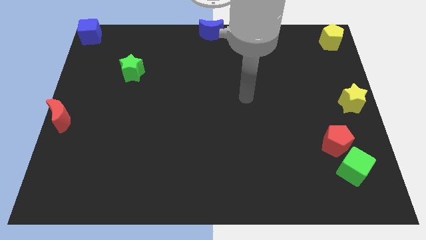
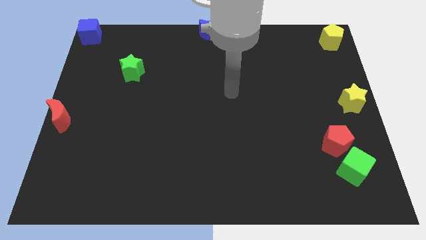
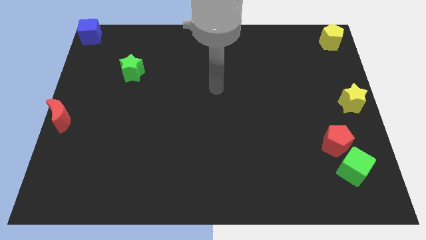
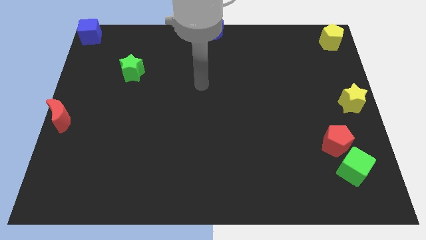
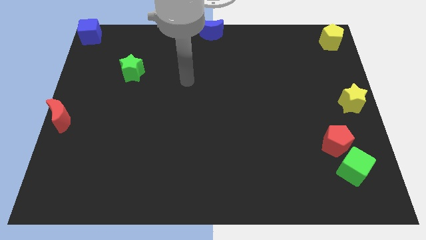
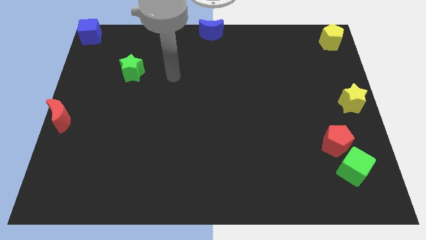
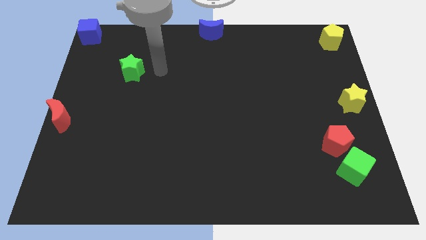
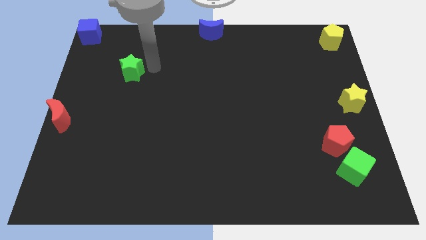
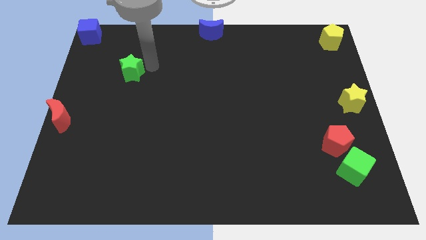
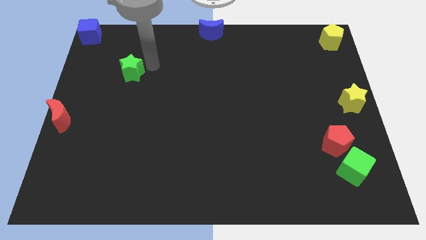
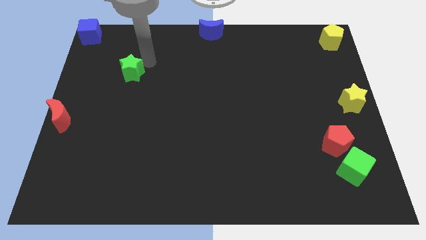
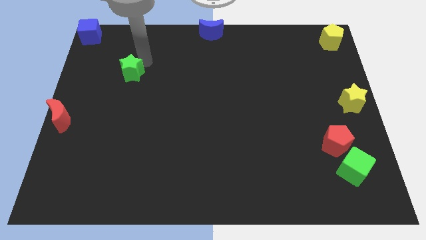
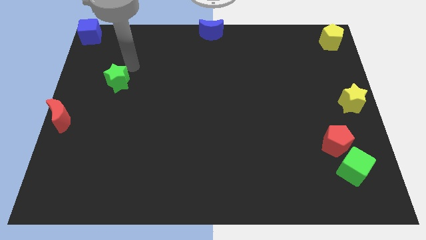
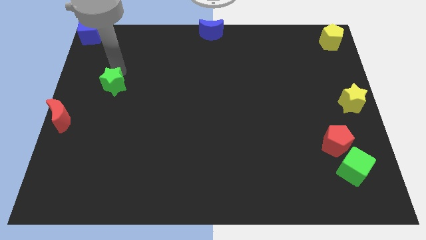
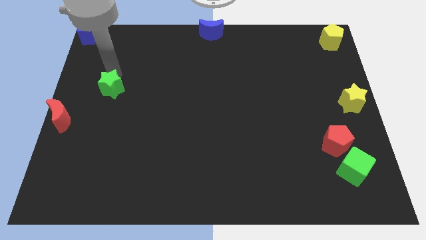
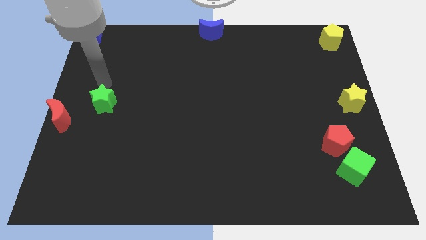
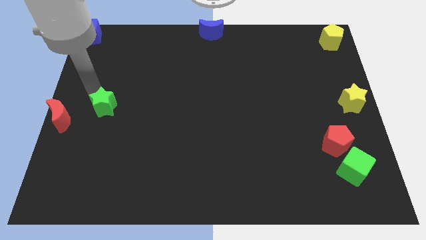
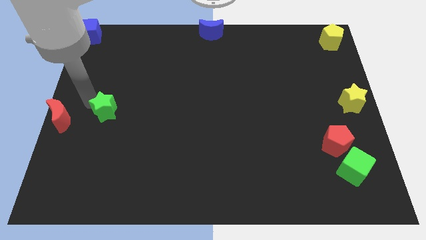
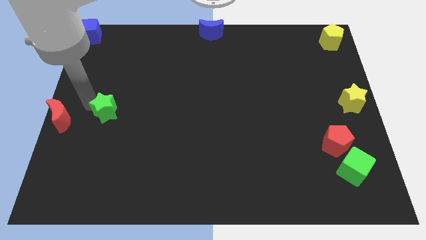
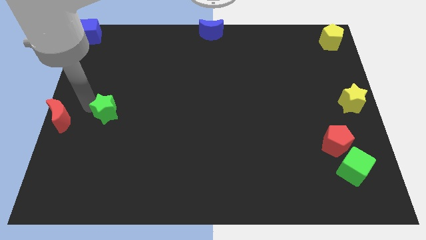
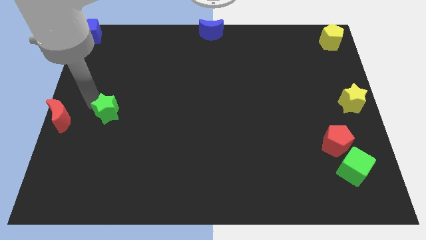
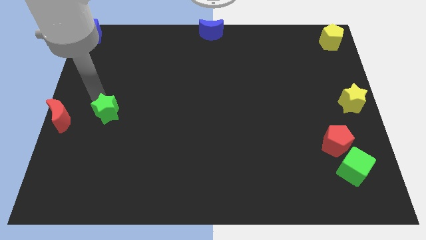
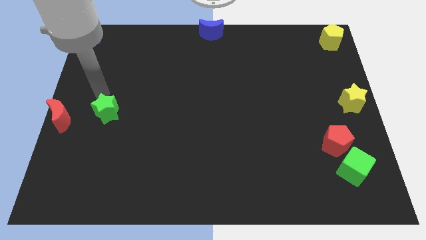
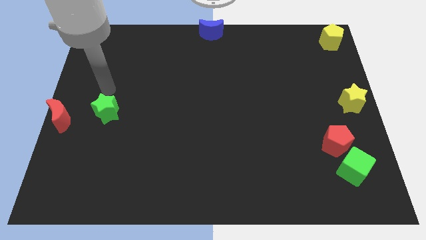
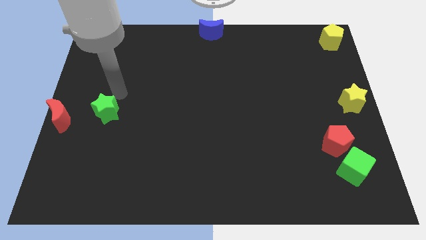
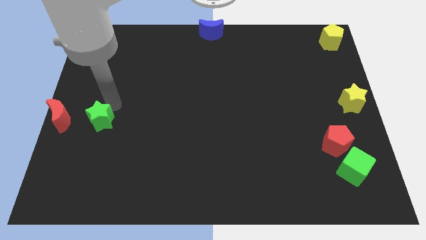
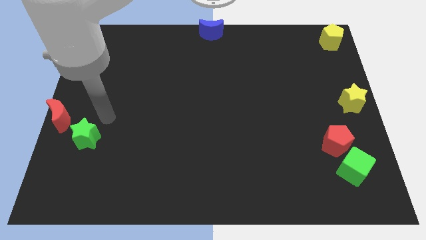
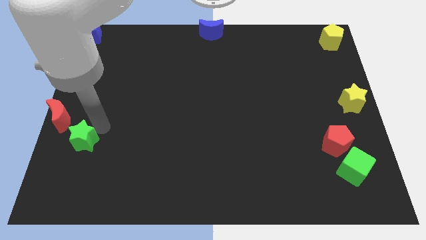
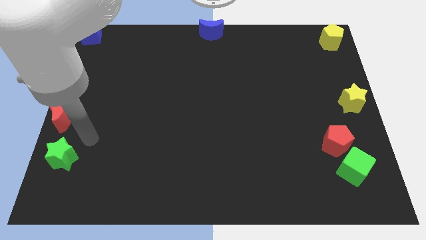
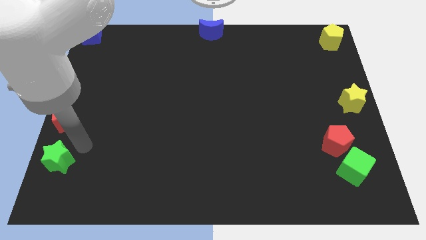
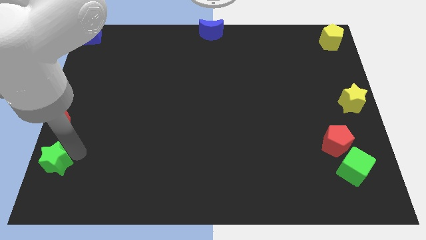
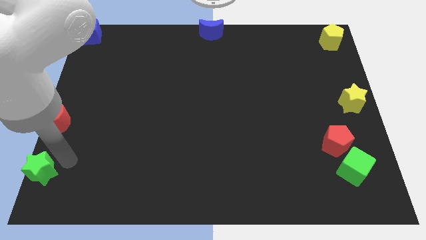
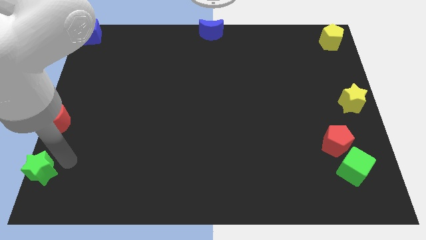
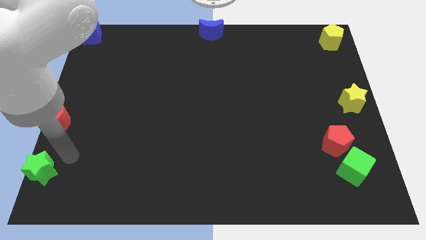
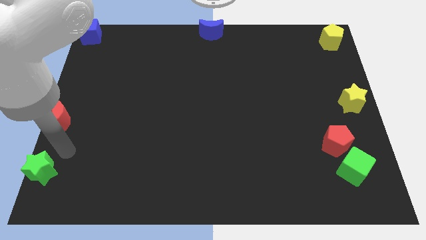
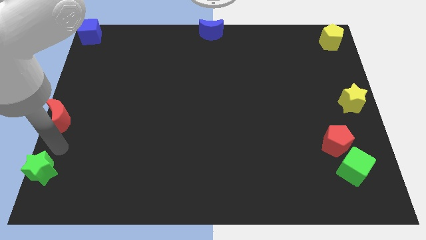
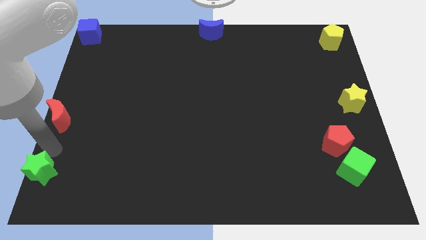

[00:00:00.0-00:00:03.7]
put the green star below the red moon

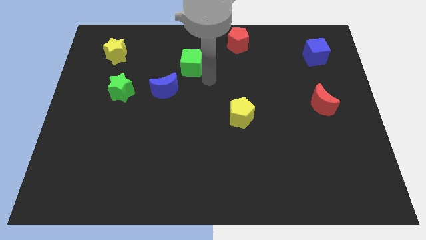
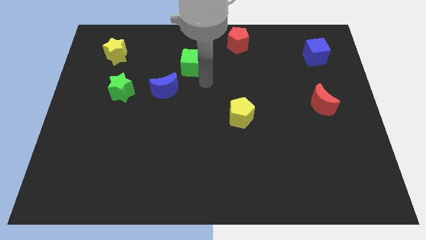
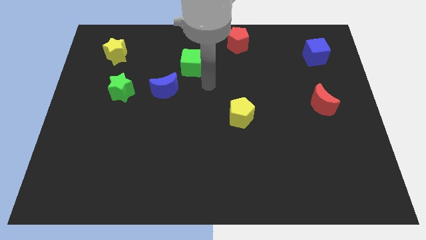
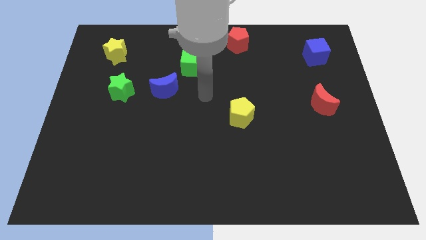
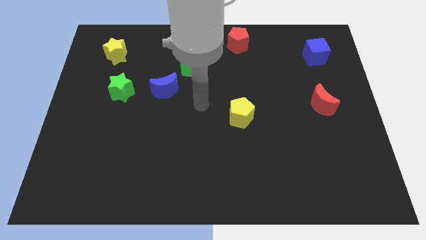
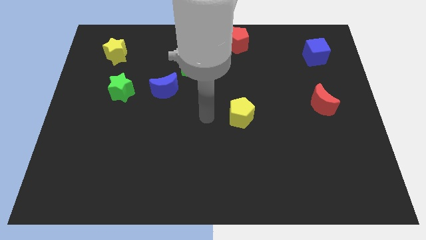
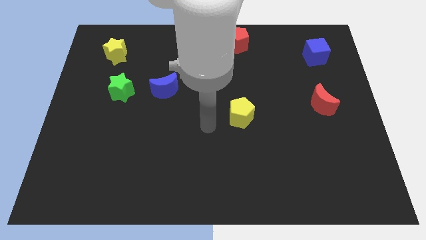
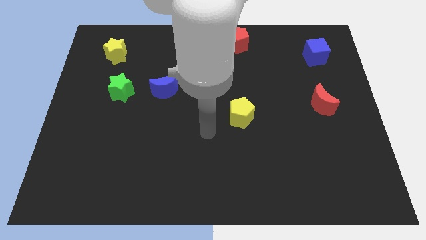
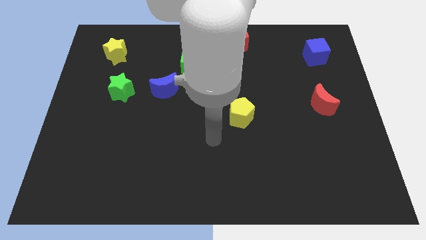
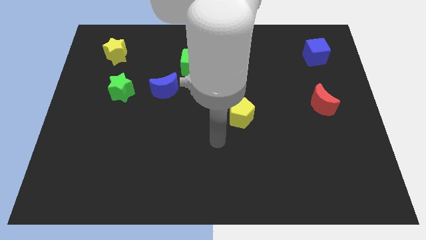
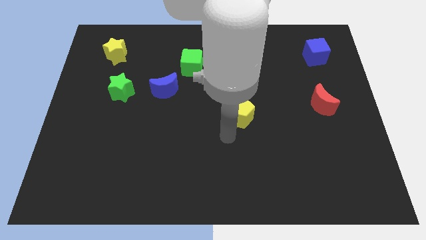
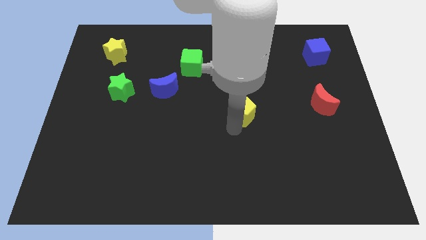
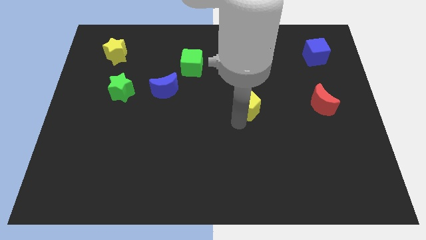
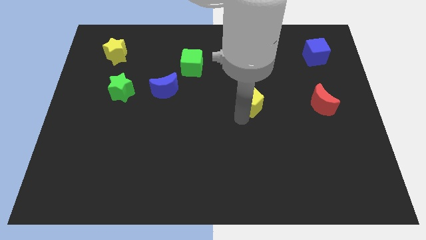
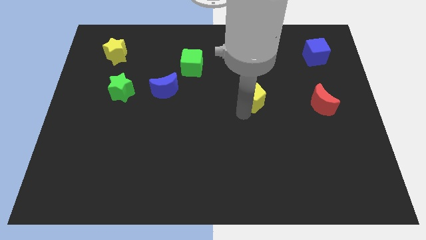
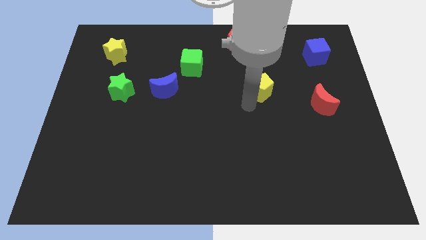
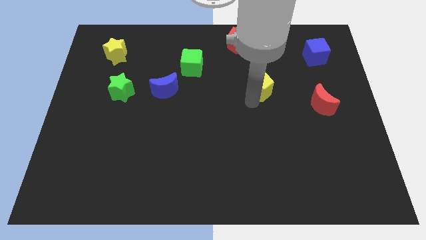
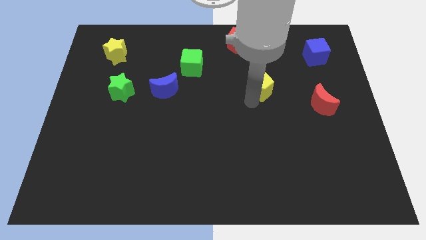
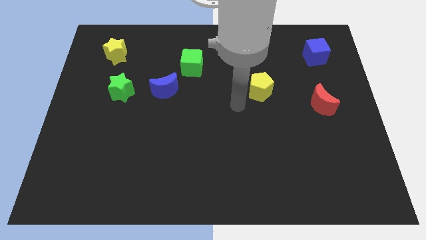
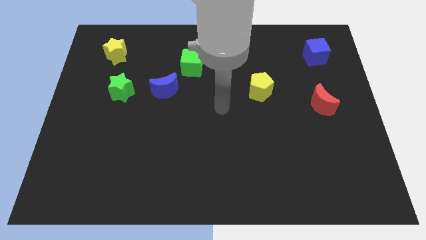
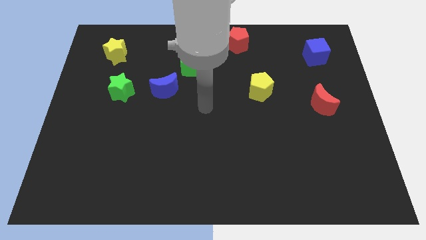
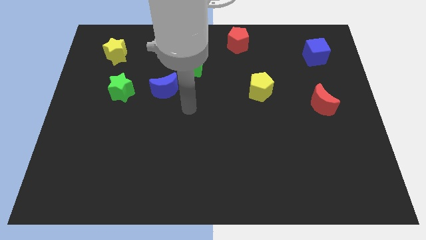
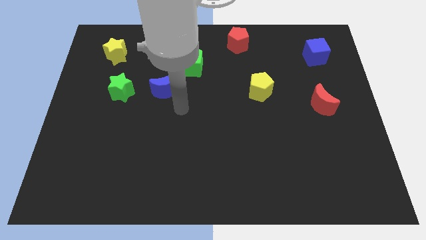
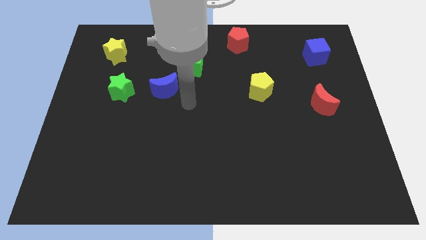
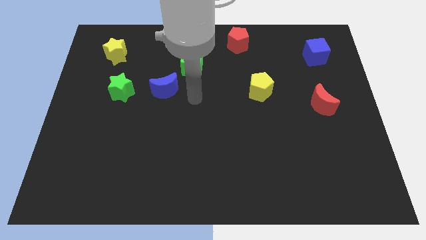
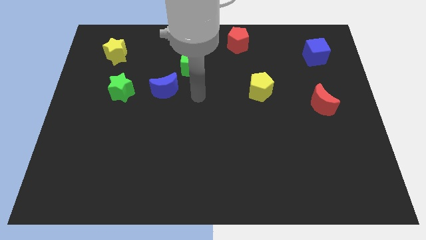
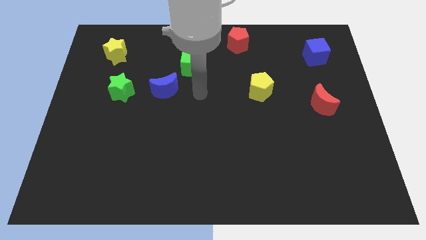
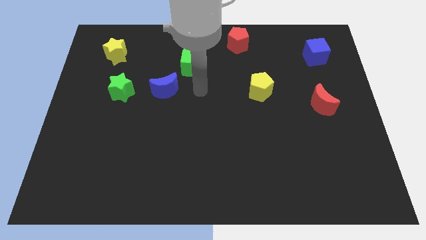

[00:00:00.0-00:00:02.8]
place your arm at the right of the blue crescent

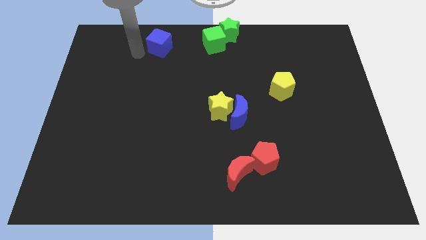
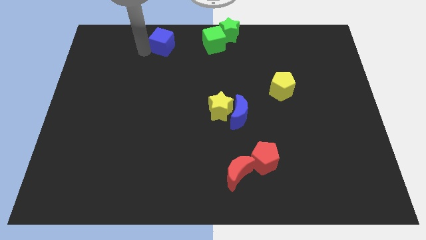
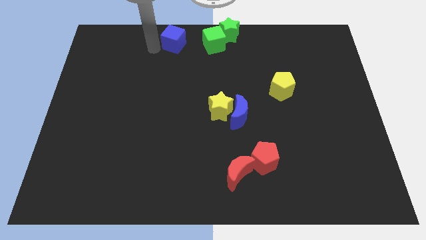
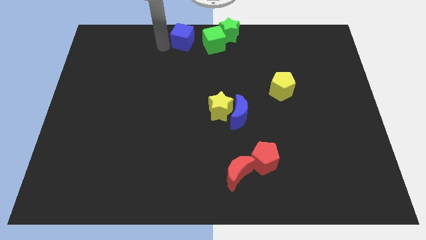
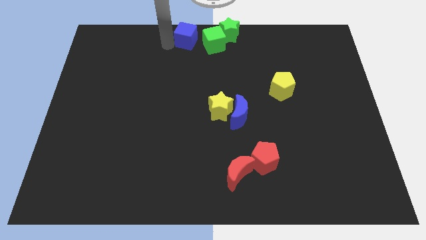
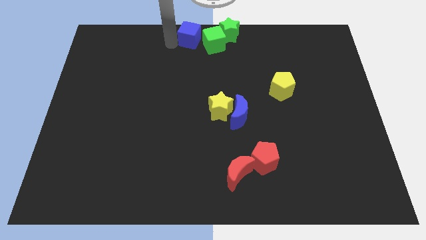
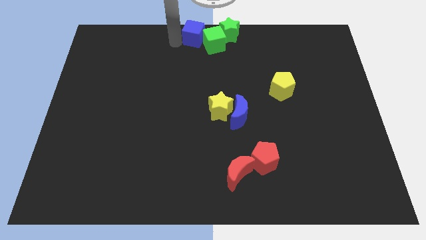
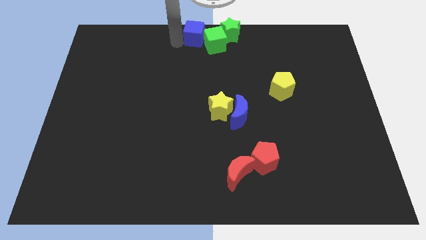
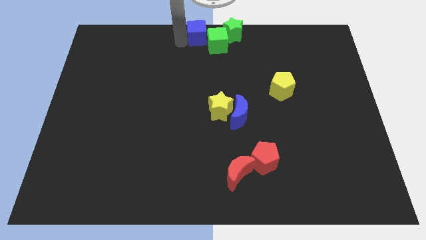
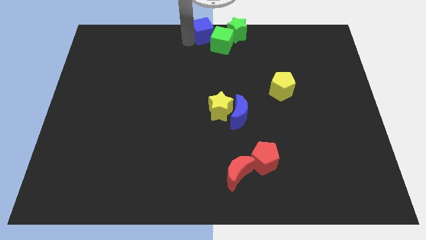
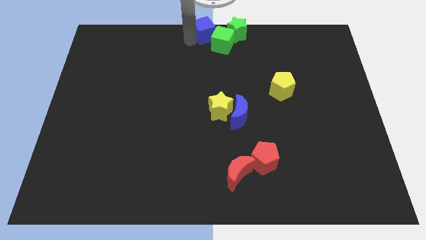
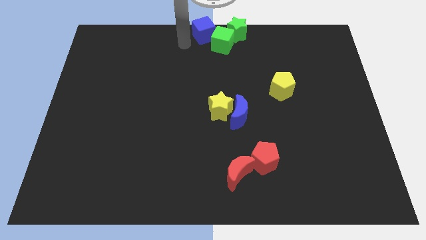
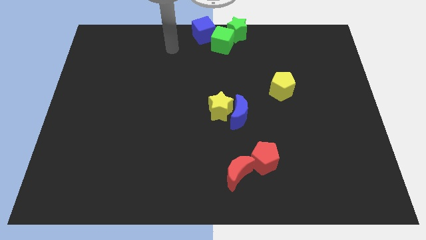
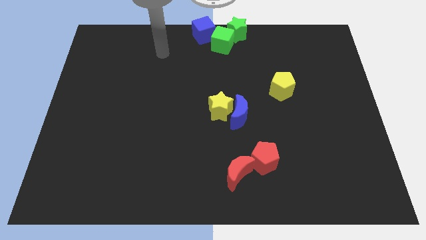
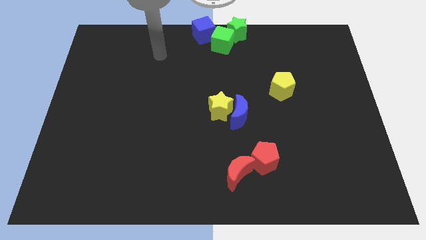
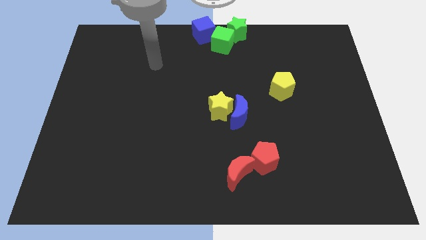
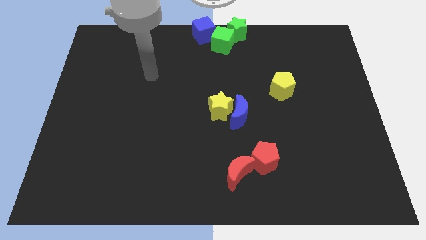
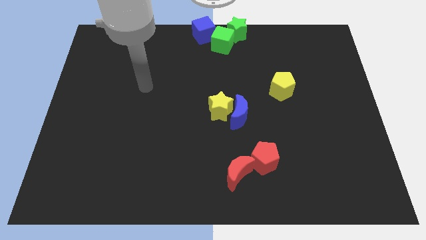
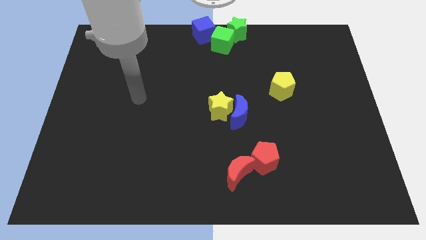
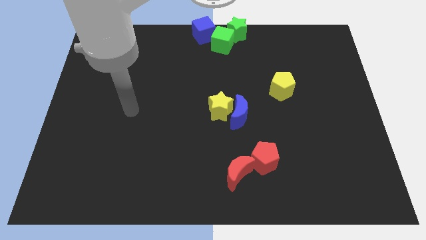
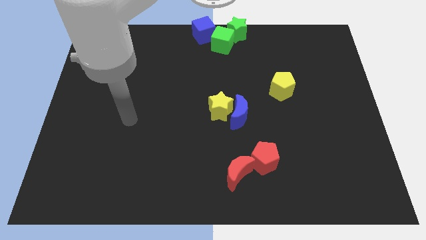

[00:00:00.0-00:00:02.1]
push the blue cube into the middle of the board

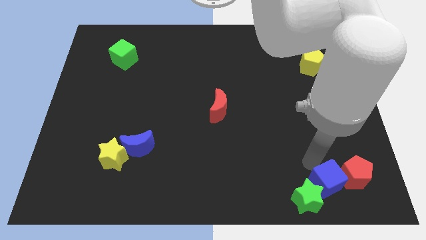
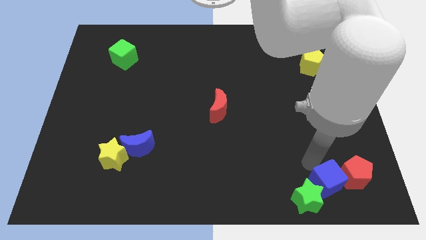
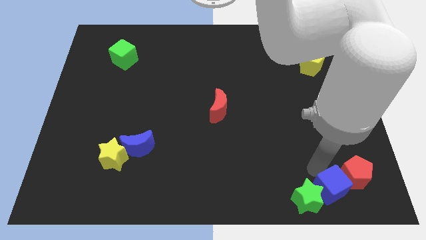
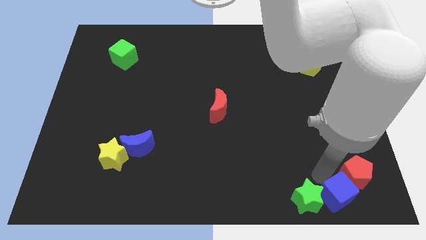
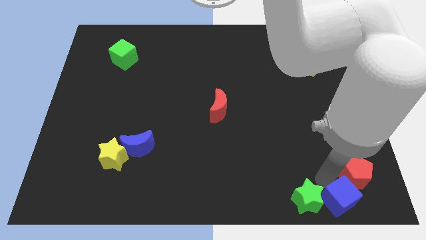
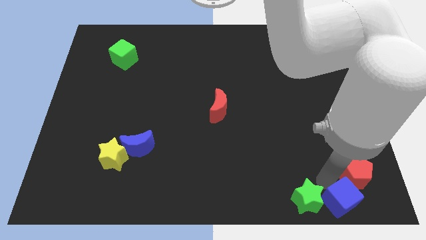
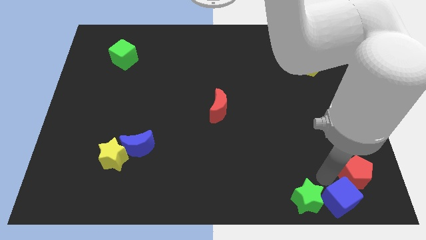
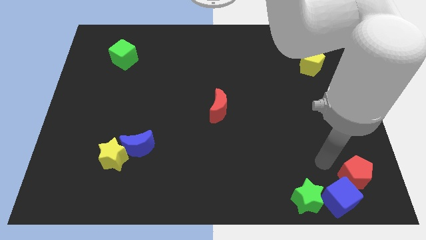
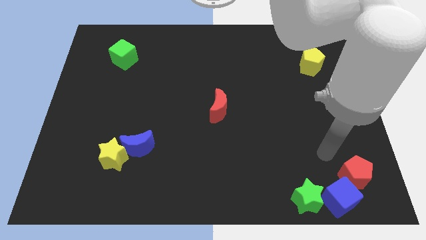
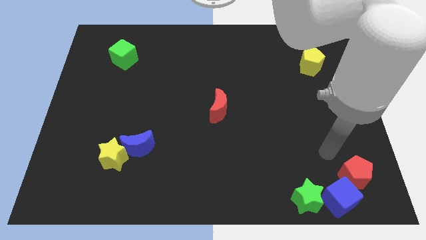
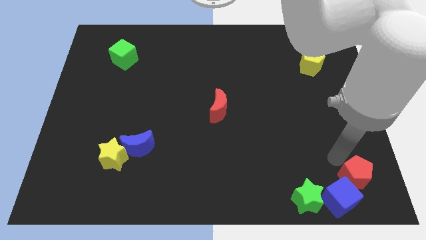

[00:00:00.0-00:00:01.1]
slide the blue cube to the bottom right of the board
